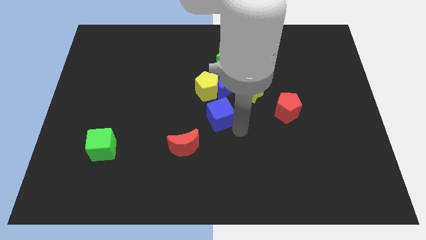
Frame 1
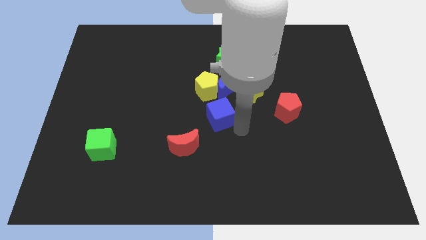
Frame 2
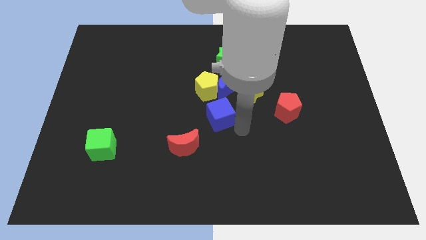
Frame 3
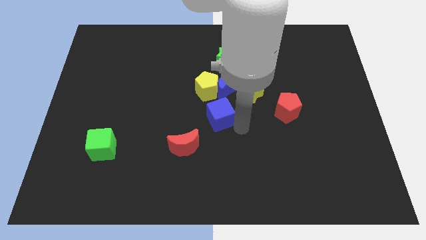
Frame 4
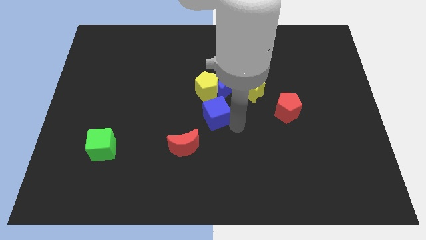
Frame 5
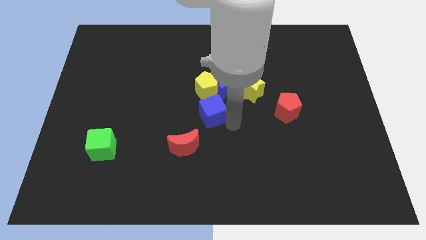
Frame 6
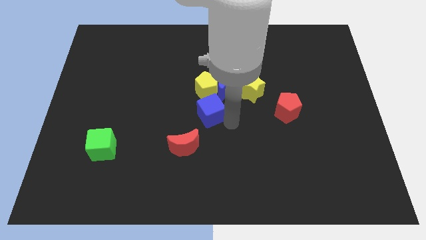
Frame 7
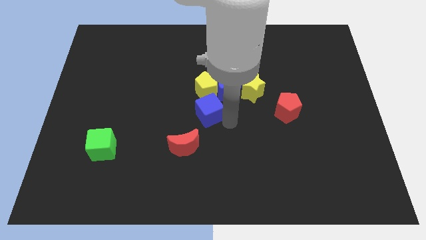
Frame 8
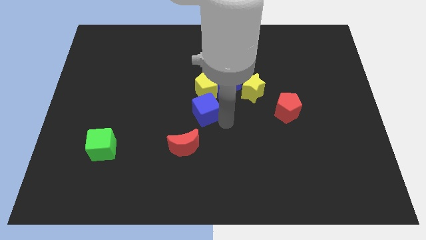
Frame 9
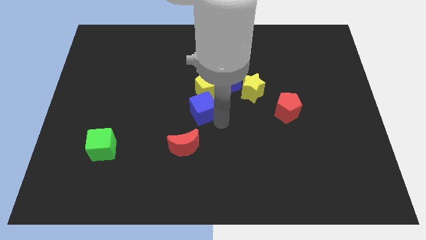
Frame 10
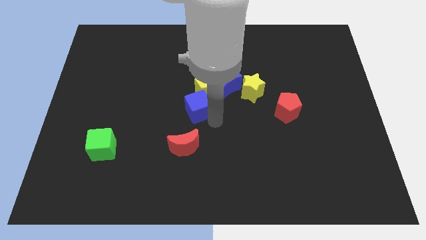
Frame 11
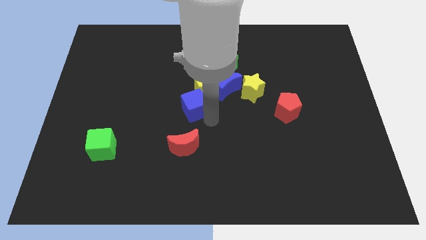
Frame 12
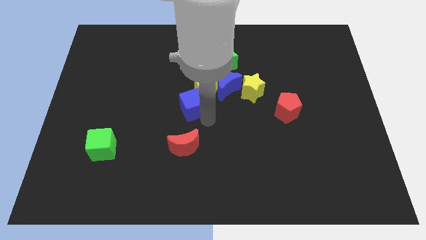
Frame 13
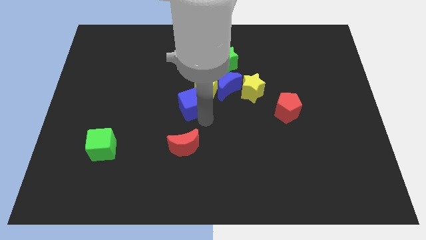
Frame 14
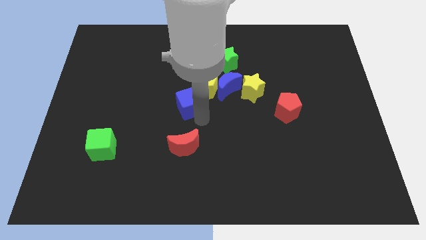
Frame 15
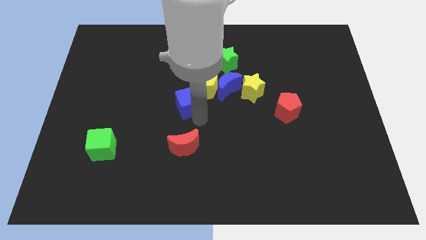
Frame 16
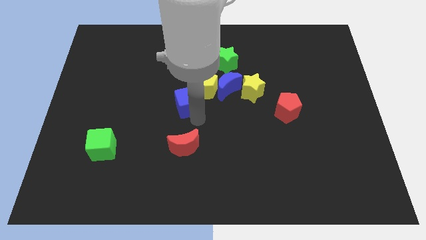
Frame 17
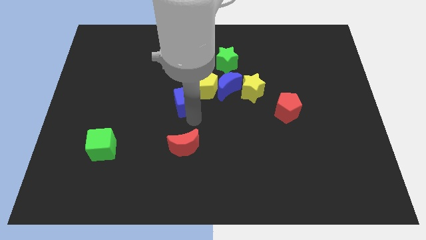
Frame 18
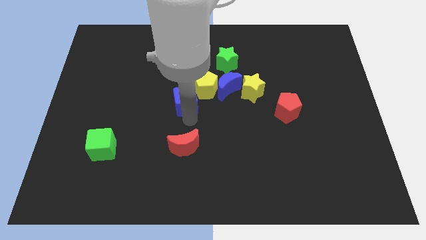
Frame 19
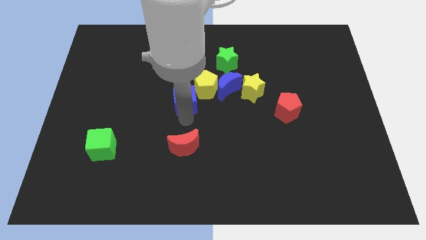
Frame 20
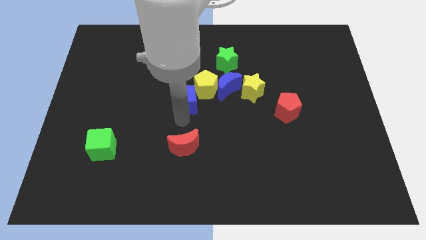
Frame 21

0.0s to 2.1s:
push the blue cube towards the bottom left corner of the yellow pentagon

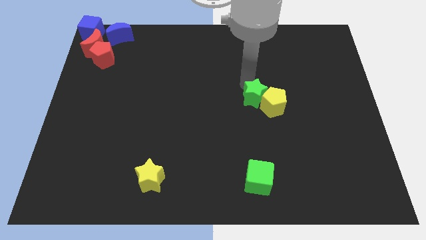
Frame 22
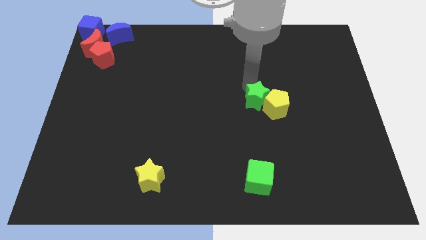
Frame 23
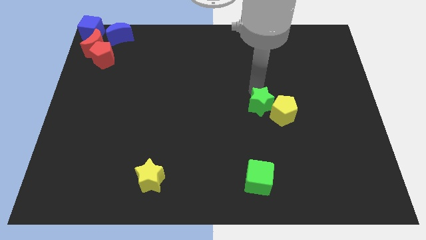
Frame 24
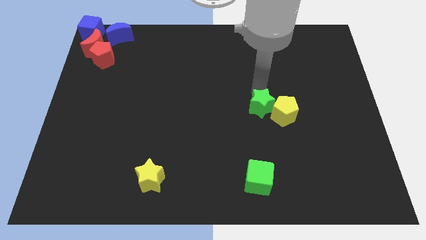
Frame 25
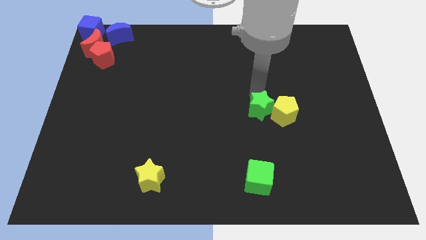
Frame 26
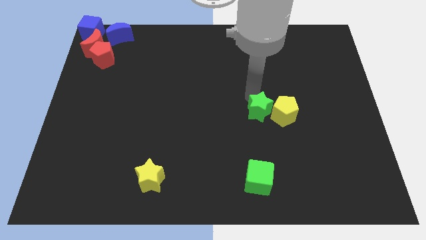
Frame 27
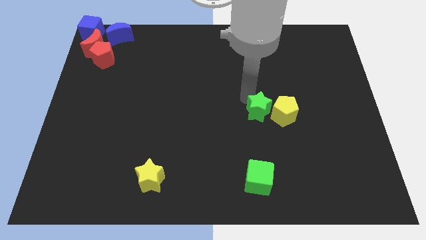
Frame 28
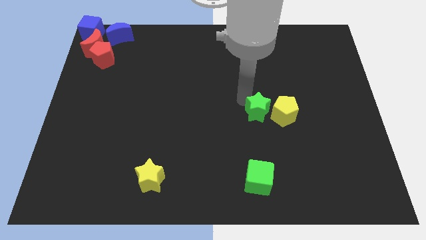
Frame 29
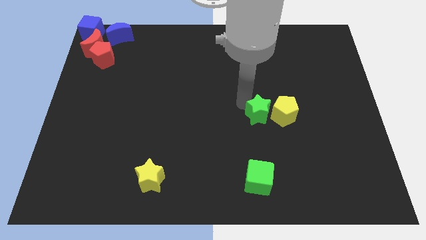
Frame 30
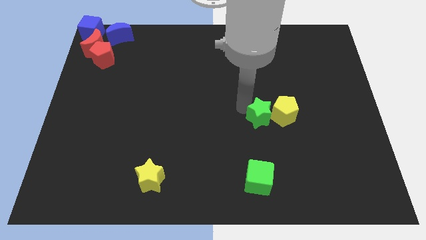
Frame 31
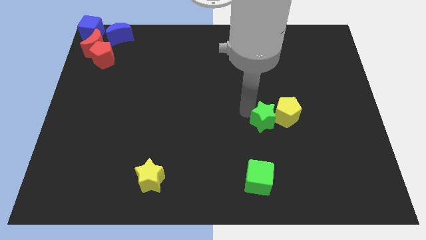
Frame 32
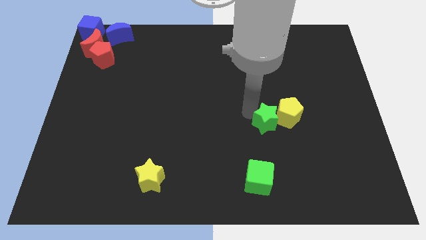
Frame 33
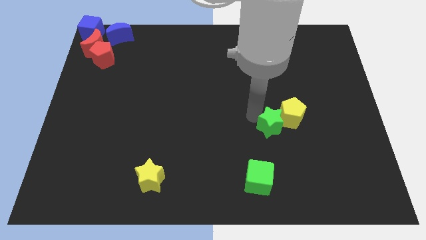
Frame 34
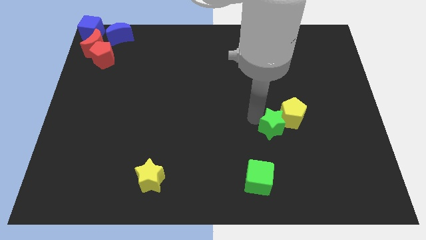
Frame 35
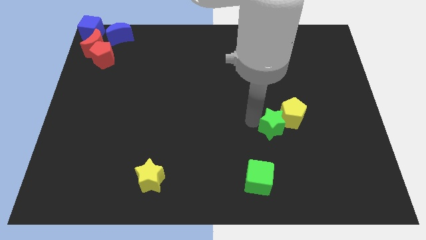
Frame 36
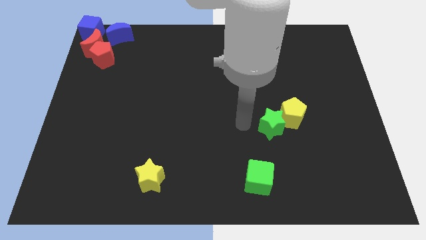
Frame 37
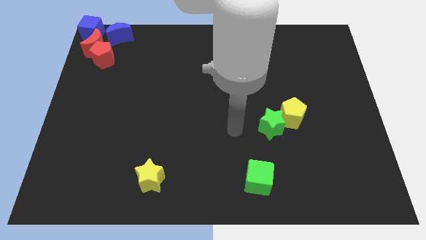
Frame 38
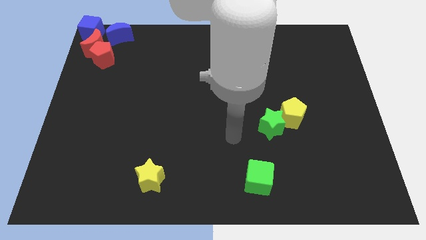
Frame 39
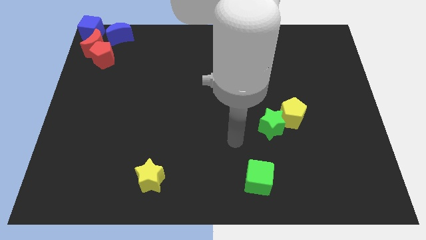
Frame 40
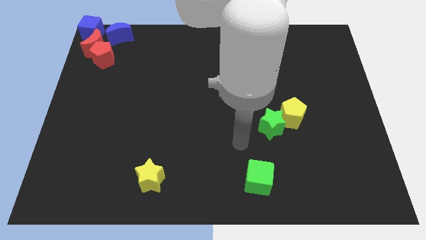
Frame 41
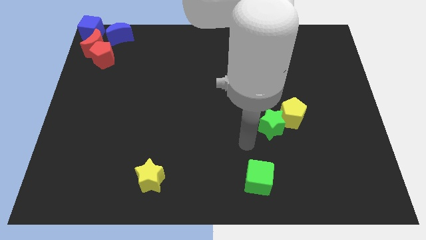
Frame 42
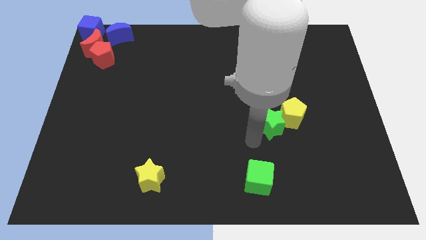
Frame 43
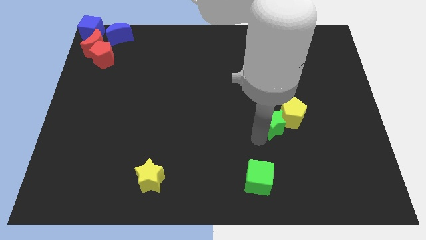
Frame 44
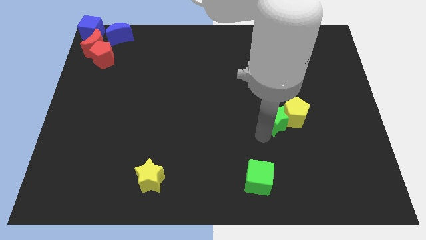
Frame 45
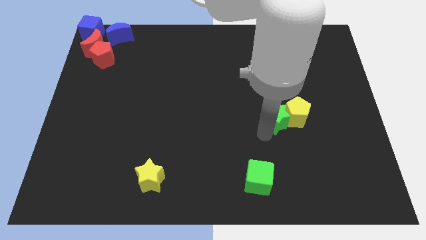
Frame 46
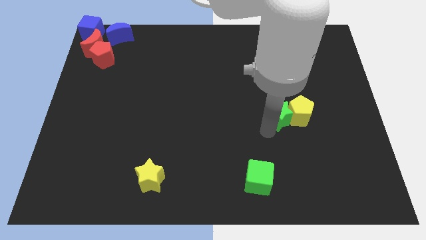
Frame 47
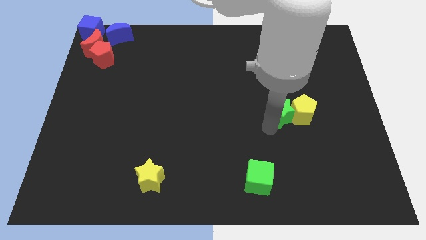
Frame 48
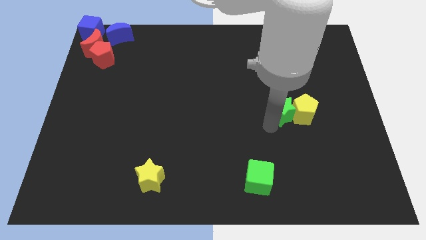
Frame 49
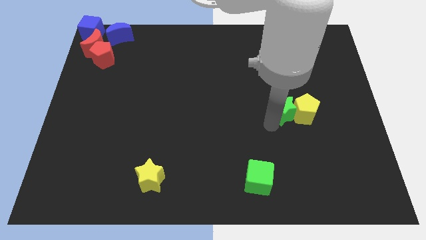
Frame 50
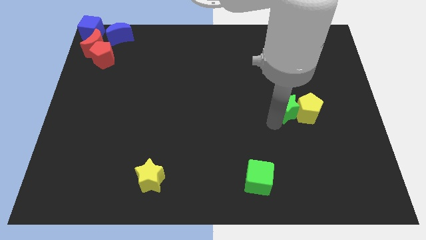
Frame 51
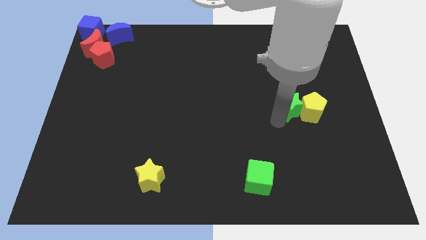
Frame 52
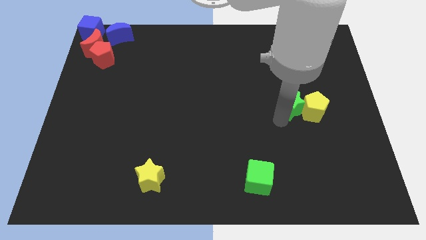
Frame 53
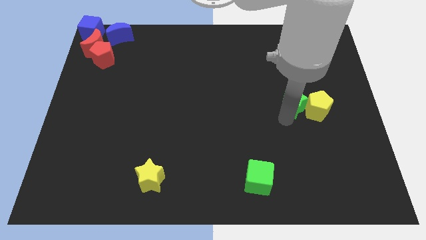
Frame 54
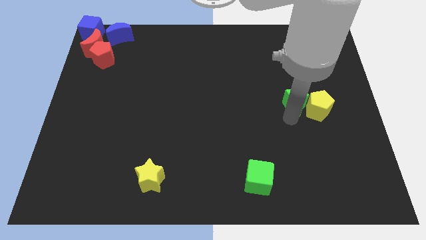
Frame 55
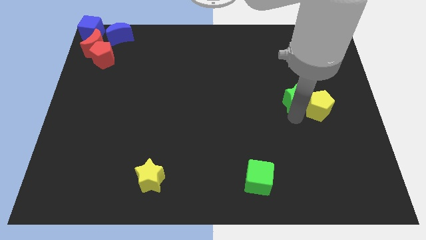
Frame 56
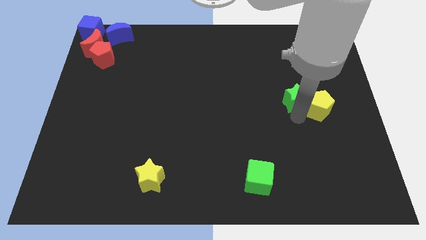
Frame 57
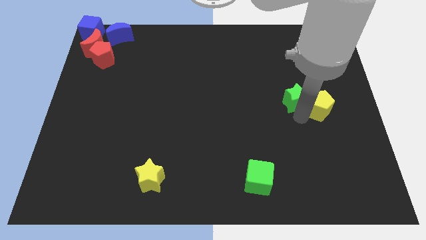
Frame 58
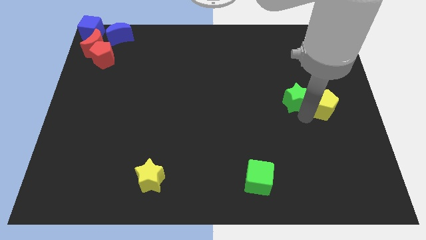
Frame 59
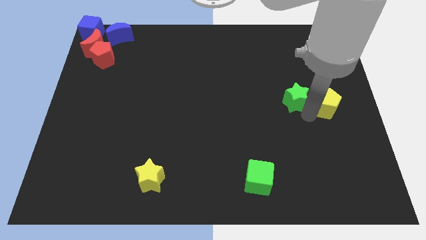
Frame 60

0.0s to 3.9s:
push the green star along with yellow pentagon to the right

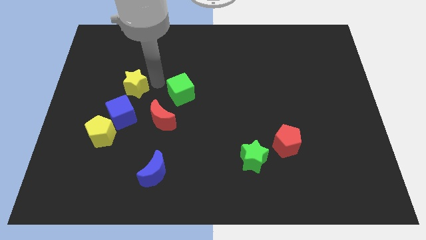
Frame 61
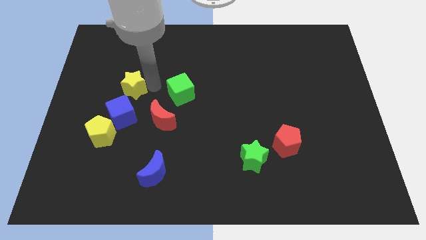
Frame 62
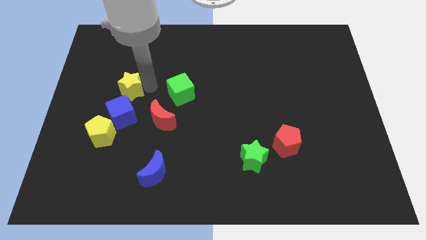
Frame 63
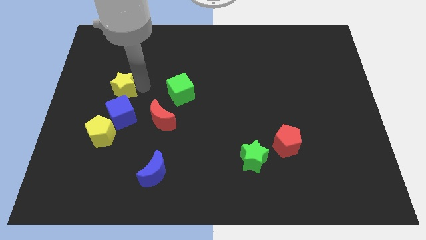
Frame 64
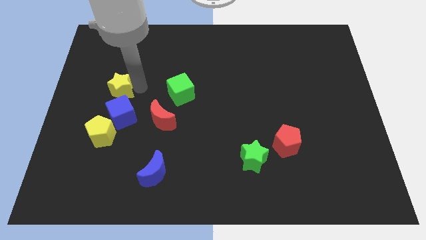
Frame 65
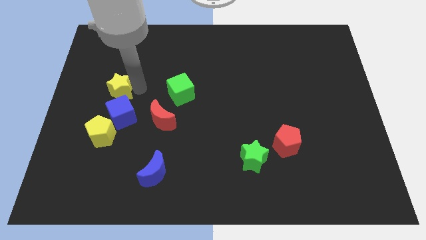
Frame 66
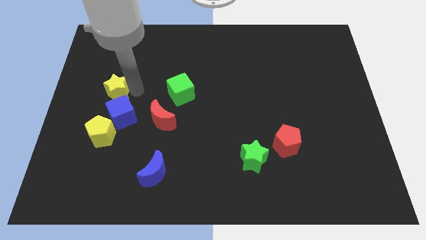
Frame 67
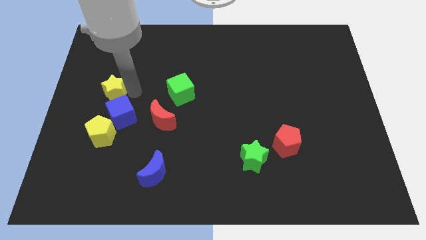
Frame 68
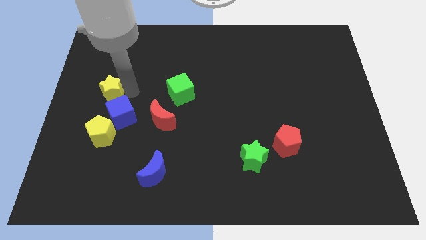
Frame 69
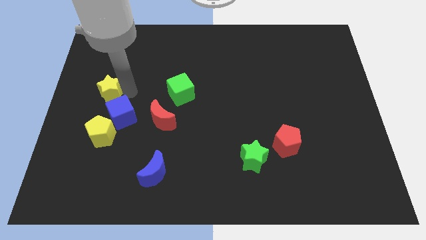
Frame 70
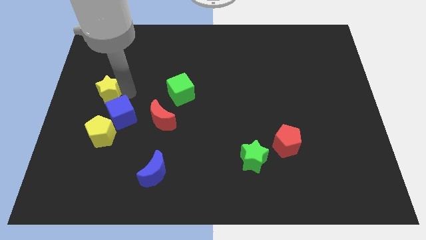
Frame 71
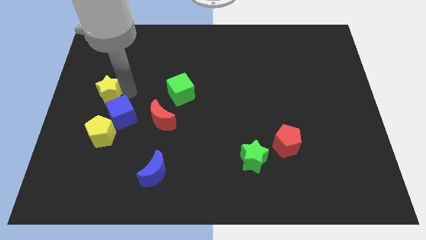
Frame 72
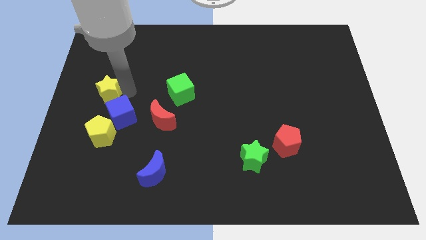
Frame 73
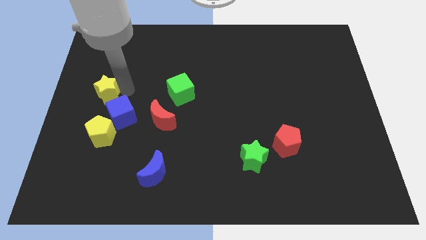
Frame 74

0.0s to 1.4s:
move the yellow star vertically above the yellow pentagon

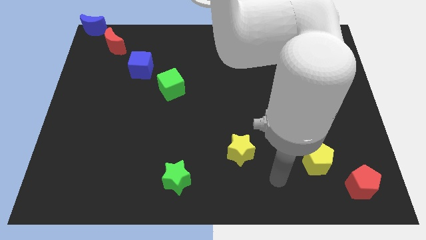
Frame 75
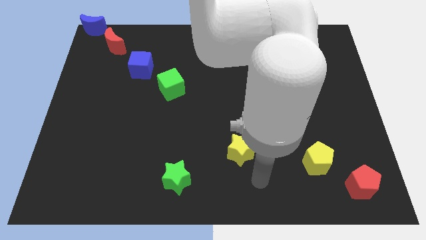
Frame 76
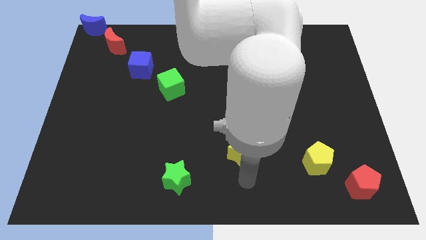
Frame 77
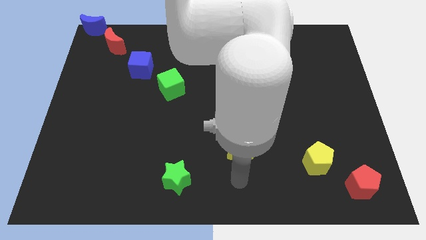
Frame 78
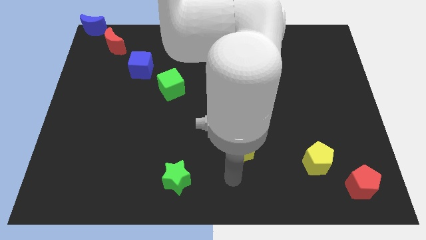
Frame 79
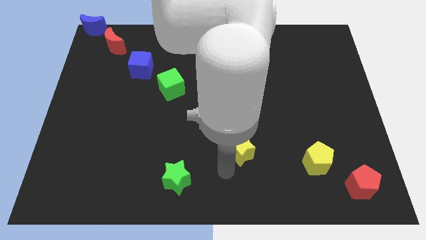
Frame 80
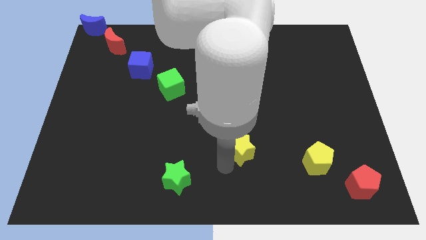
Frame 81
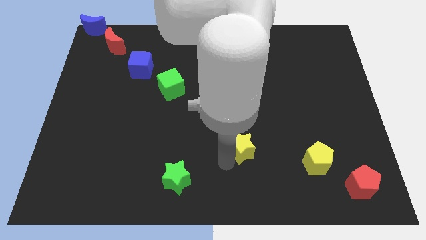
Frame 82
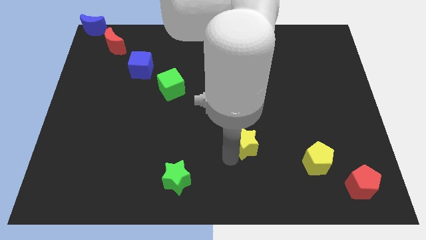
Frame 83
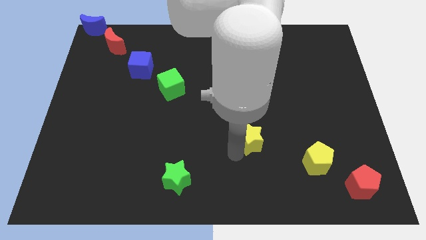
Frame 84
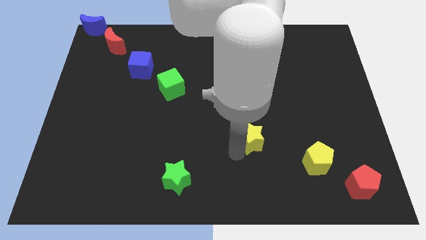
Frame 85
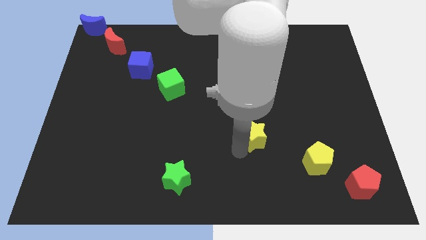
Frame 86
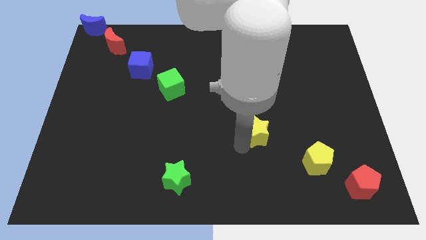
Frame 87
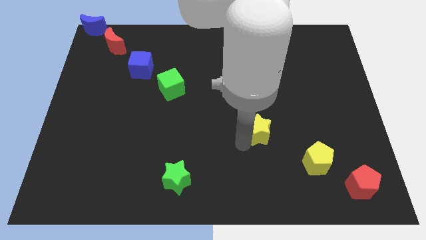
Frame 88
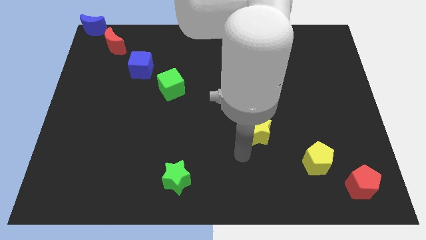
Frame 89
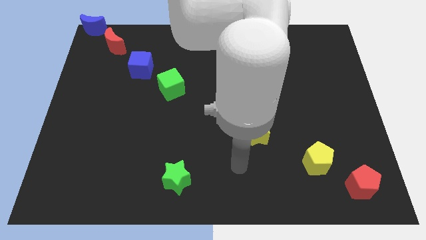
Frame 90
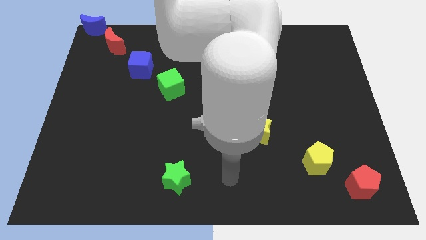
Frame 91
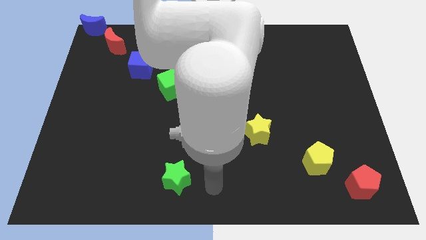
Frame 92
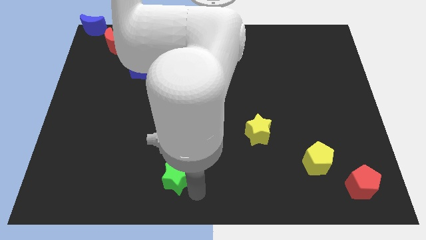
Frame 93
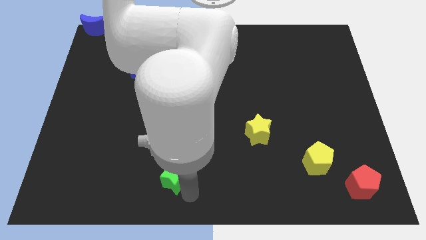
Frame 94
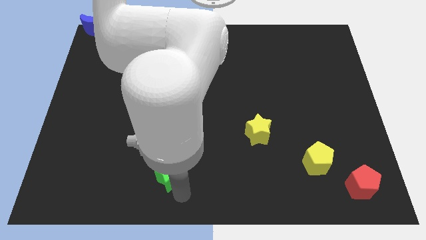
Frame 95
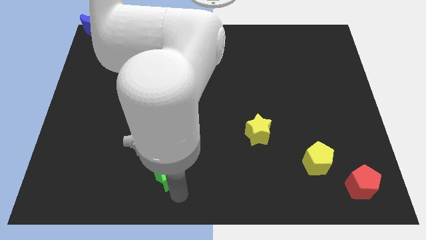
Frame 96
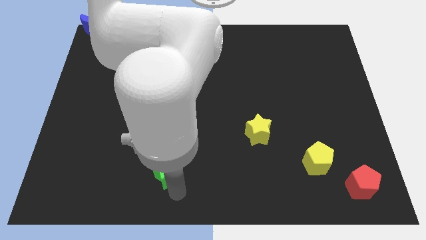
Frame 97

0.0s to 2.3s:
move the yellow star diagonally to the top left of the yellow pentagon
